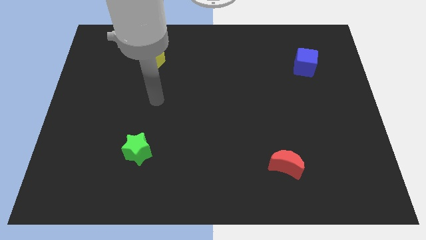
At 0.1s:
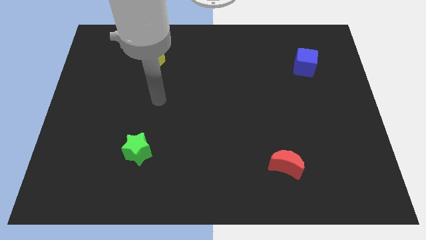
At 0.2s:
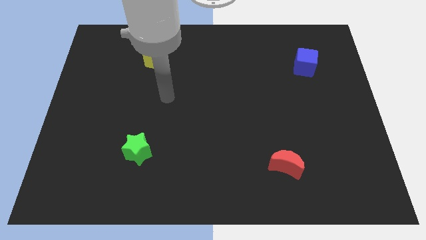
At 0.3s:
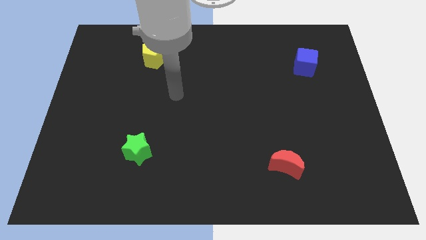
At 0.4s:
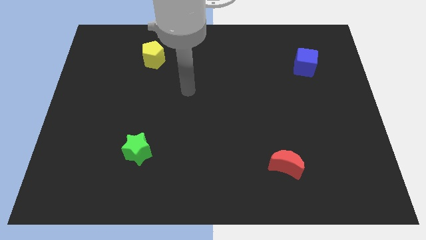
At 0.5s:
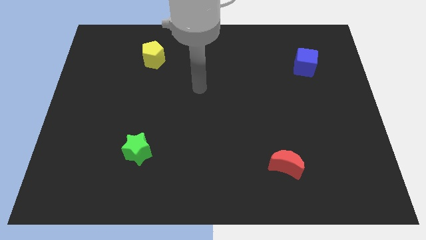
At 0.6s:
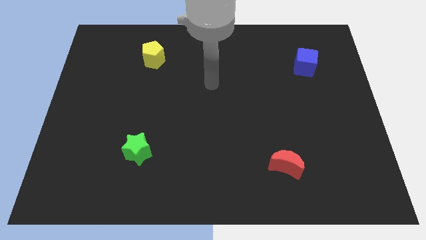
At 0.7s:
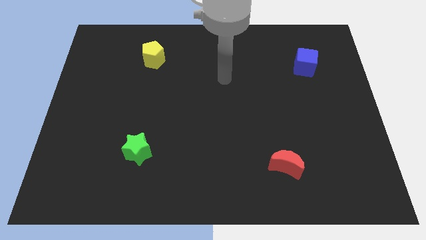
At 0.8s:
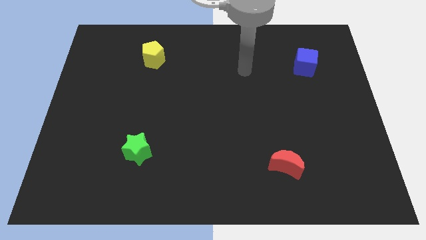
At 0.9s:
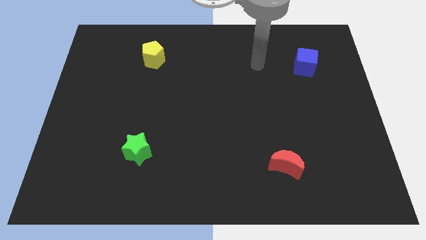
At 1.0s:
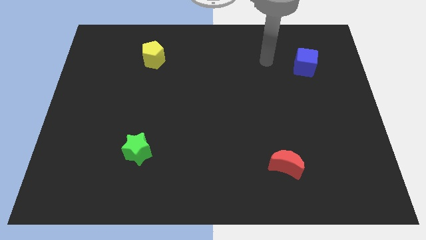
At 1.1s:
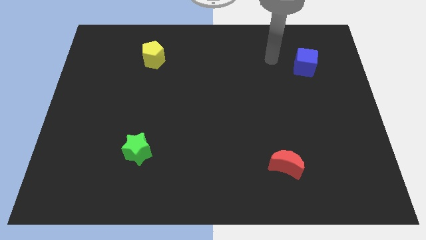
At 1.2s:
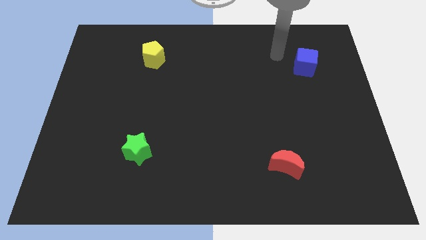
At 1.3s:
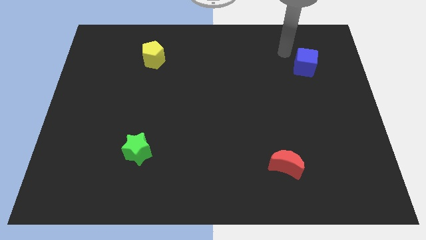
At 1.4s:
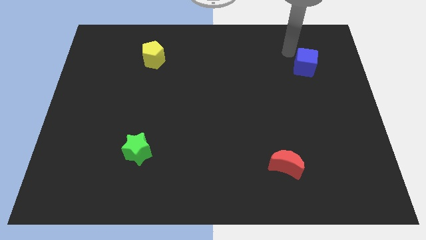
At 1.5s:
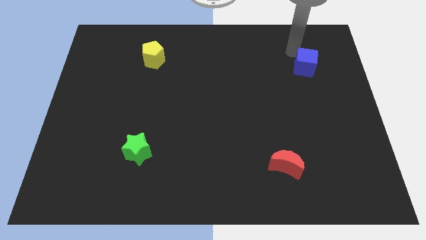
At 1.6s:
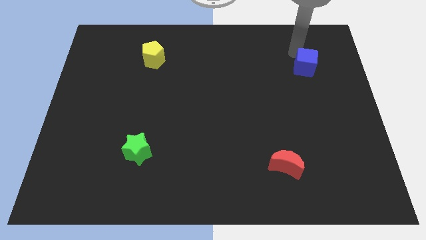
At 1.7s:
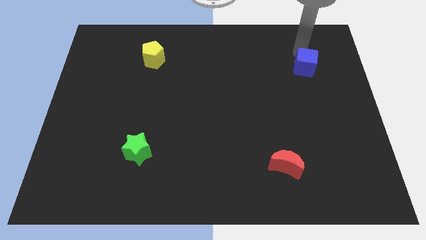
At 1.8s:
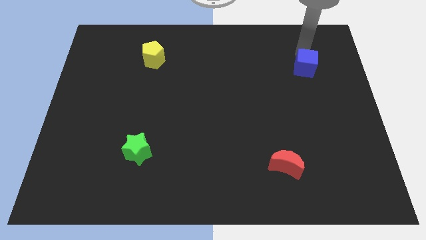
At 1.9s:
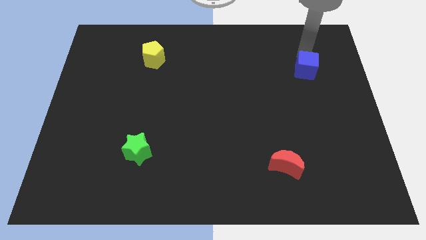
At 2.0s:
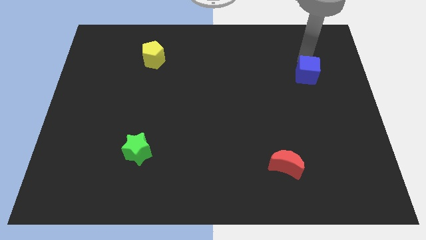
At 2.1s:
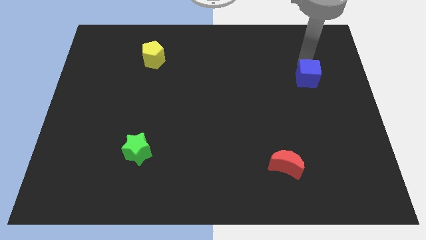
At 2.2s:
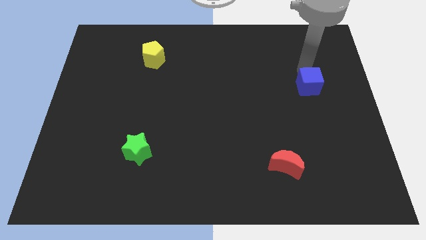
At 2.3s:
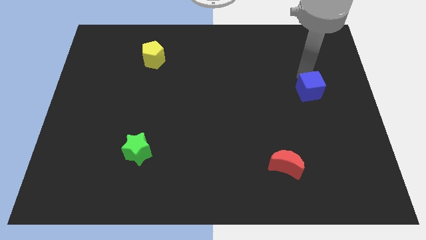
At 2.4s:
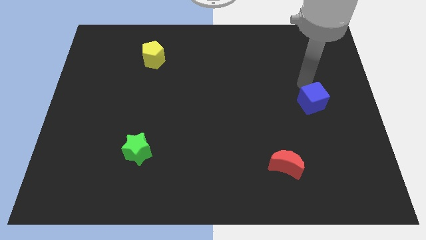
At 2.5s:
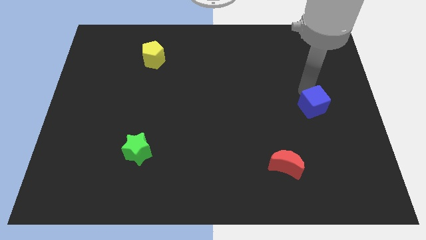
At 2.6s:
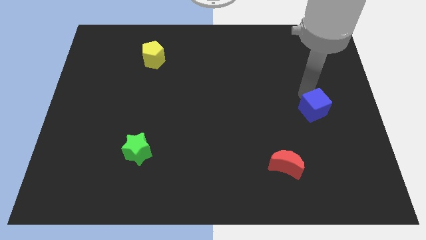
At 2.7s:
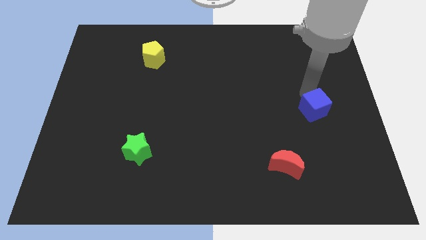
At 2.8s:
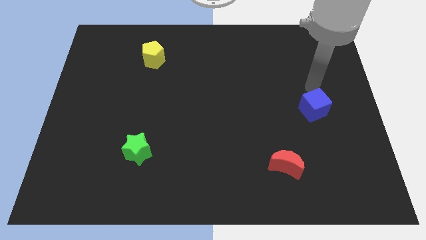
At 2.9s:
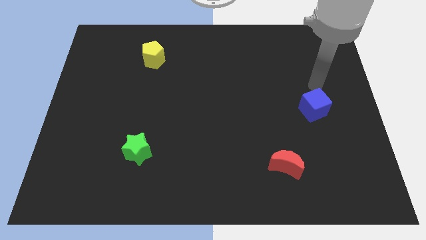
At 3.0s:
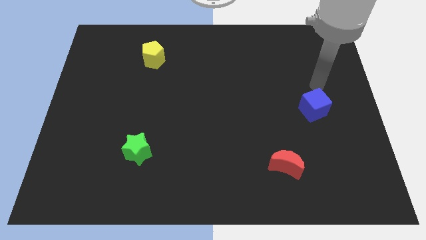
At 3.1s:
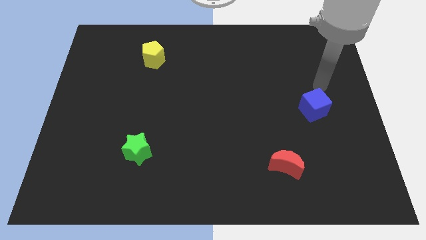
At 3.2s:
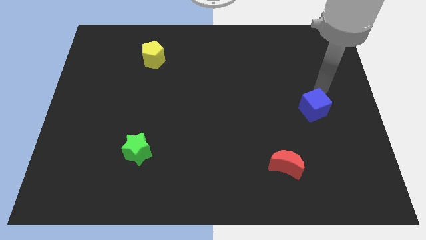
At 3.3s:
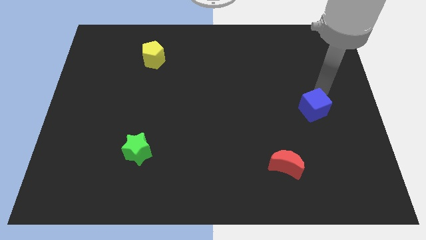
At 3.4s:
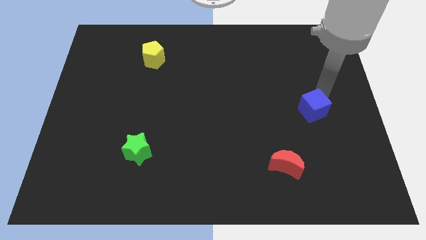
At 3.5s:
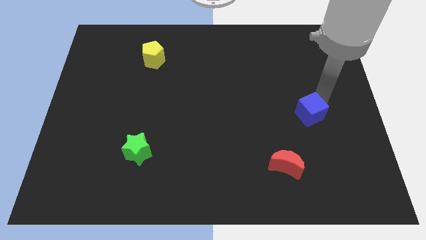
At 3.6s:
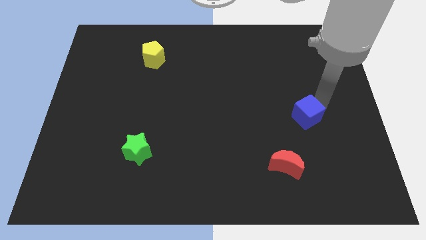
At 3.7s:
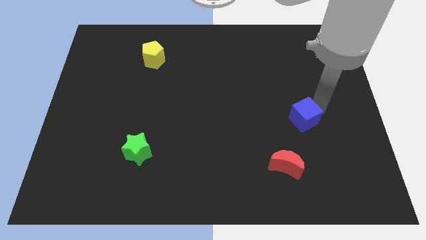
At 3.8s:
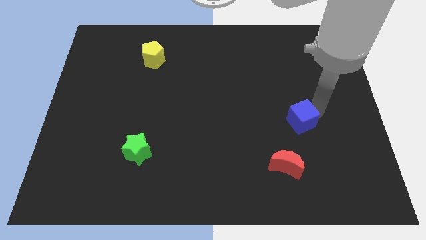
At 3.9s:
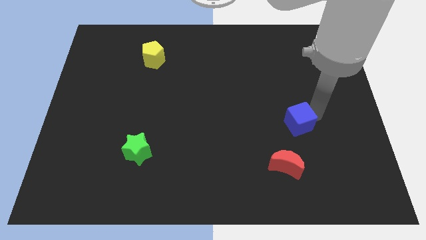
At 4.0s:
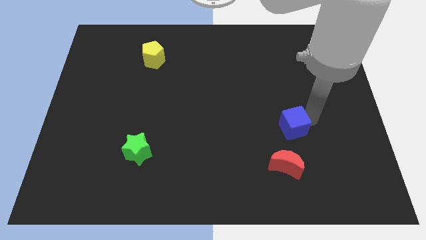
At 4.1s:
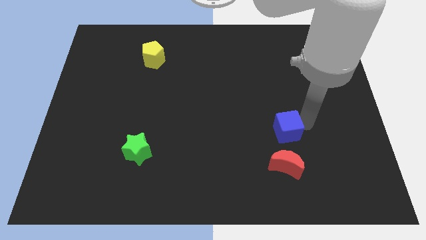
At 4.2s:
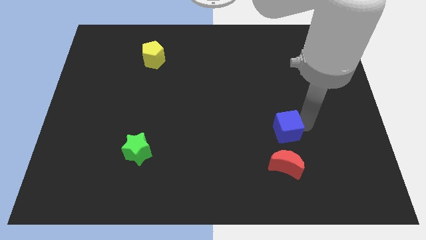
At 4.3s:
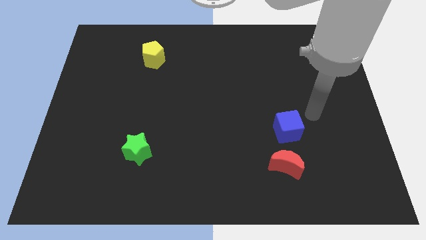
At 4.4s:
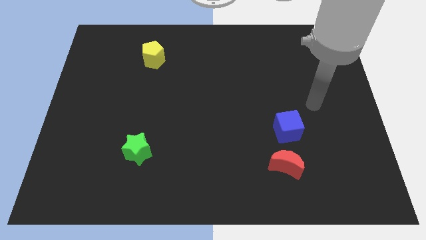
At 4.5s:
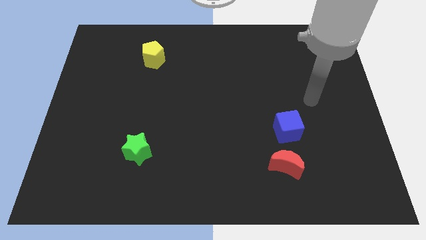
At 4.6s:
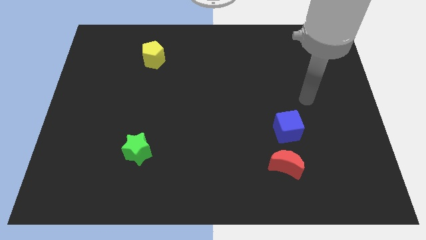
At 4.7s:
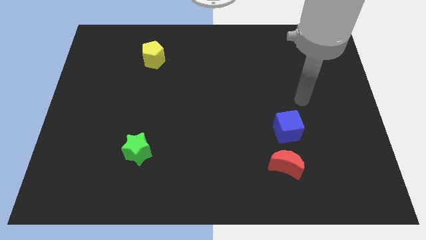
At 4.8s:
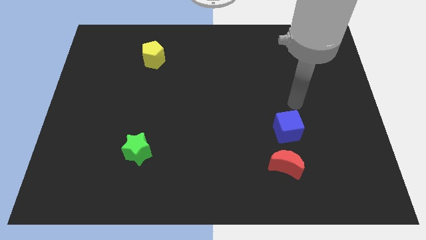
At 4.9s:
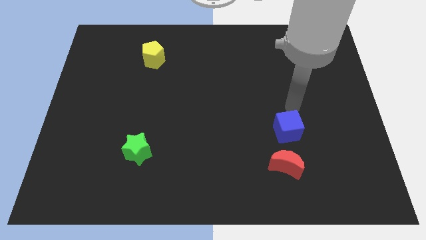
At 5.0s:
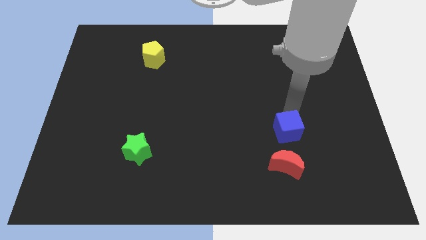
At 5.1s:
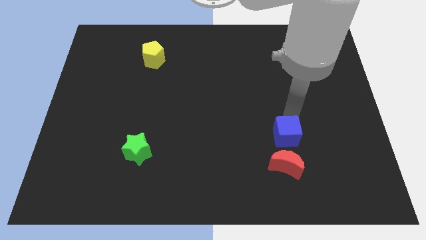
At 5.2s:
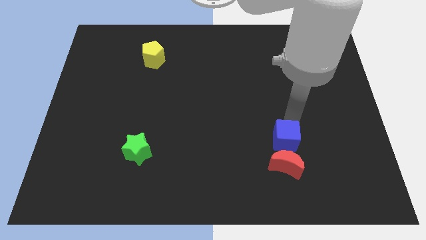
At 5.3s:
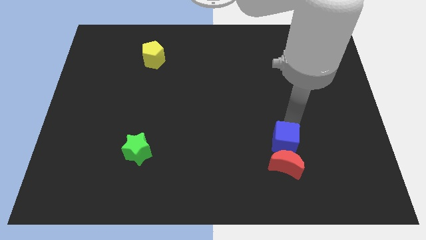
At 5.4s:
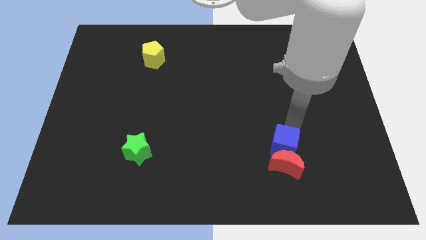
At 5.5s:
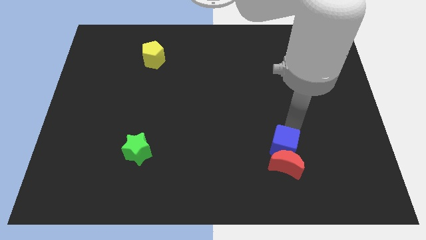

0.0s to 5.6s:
move the blue cube next to the red moon

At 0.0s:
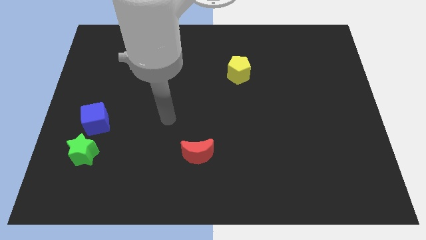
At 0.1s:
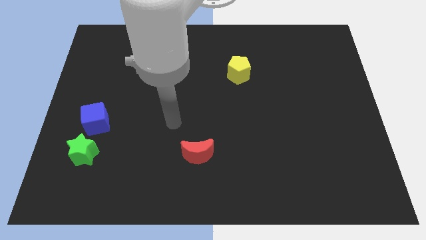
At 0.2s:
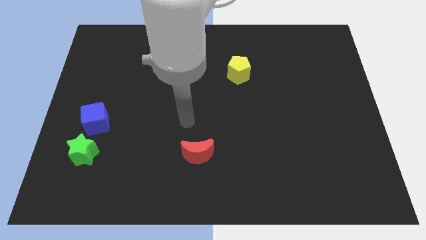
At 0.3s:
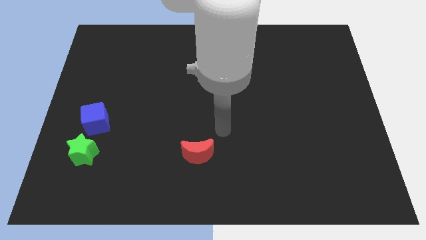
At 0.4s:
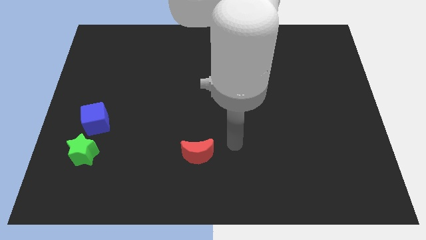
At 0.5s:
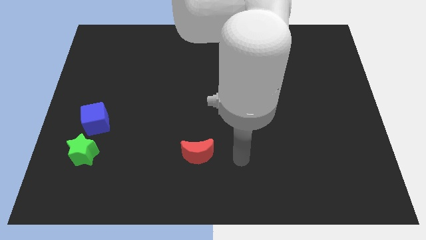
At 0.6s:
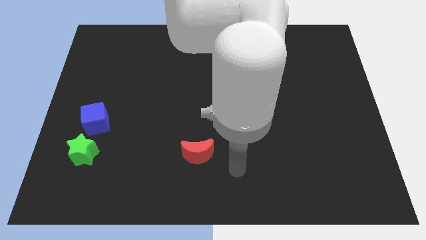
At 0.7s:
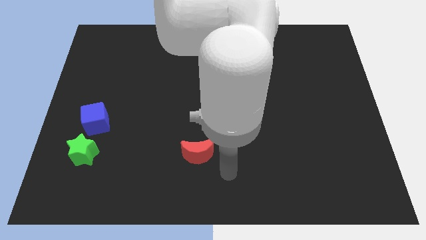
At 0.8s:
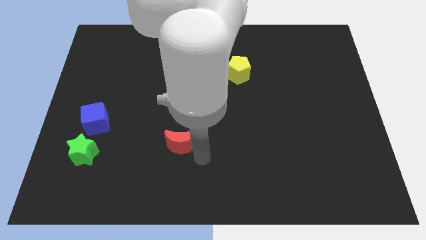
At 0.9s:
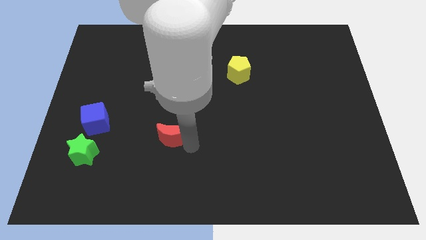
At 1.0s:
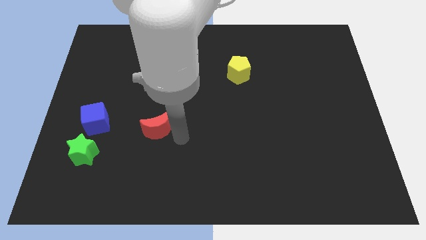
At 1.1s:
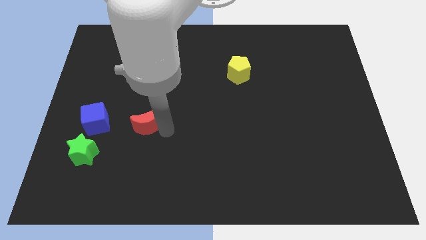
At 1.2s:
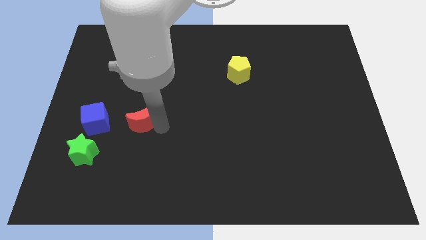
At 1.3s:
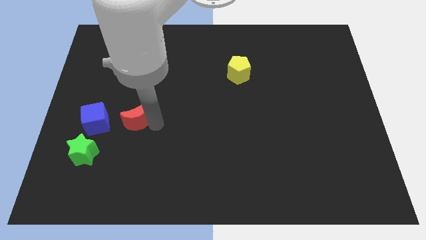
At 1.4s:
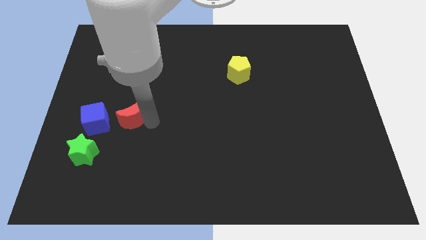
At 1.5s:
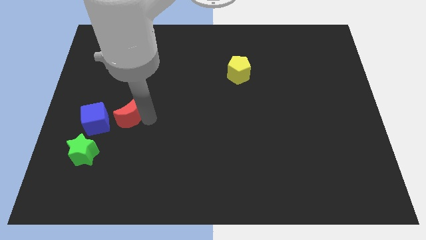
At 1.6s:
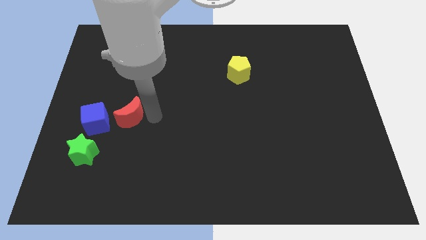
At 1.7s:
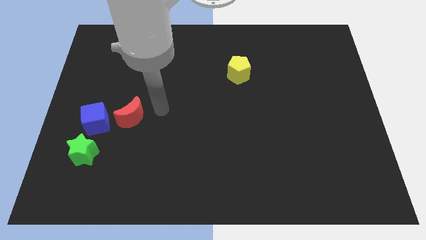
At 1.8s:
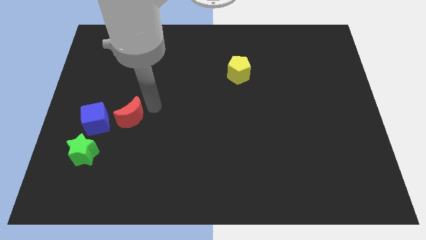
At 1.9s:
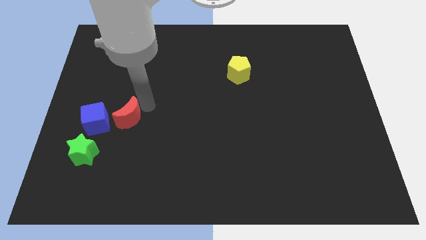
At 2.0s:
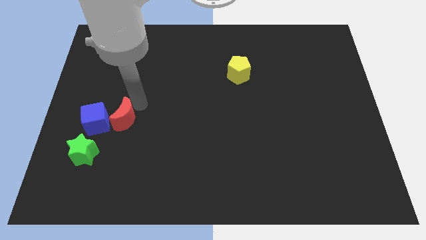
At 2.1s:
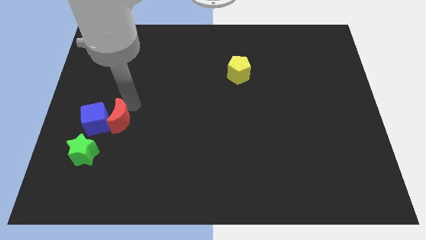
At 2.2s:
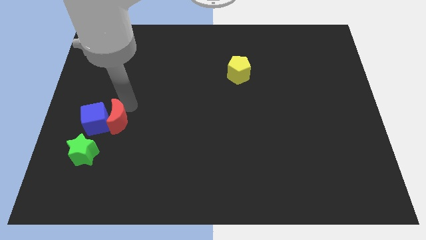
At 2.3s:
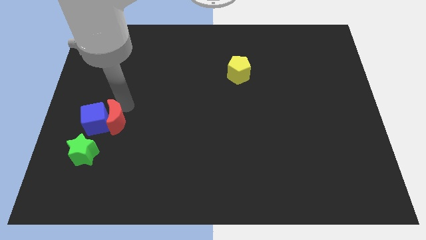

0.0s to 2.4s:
slide the red moon close to the blue block
